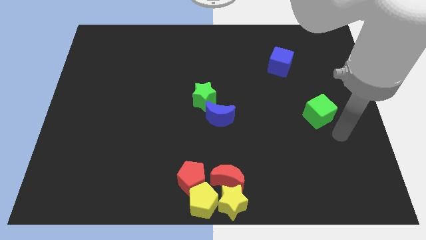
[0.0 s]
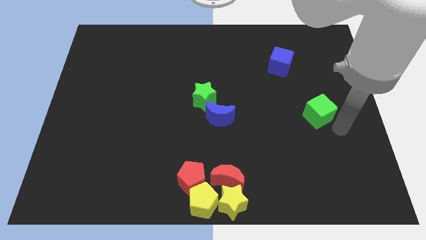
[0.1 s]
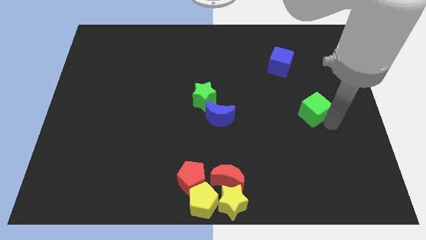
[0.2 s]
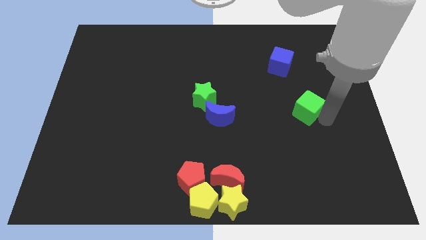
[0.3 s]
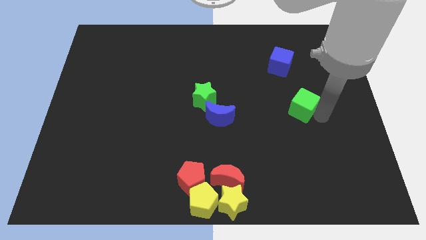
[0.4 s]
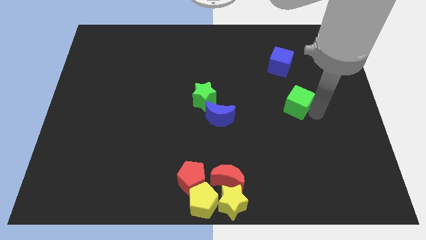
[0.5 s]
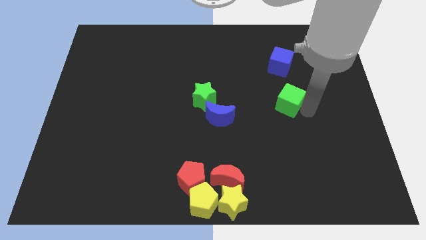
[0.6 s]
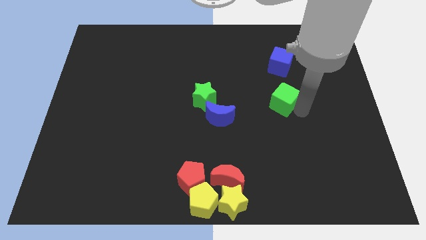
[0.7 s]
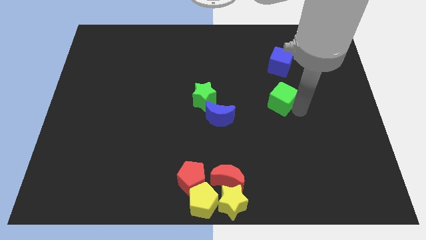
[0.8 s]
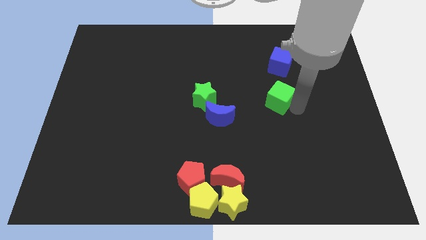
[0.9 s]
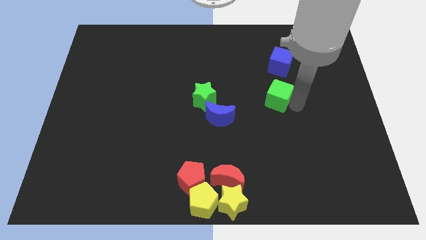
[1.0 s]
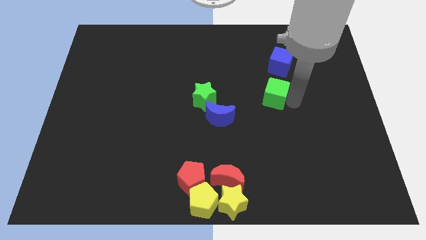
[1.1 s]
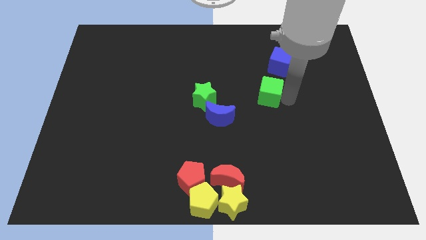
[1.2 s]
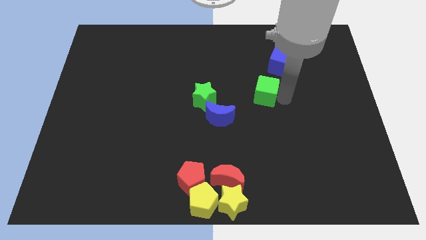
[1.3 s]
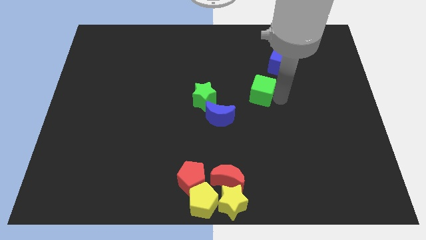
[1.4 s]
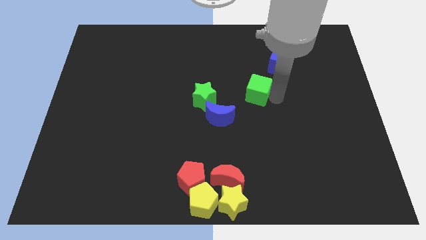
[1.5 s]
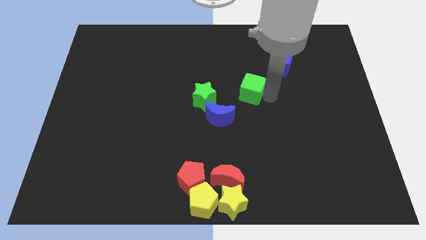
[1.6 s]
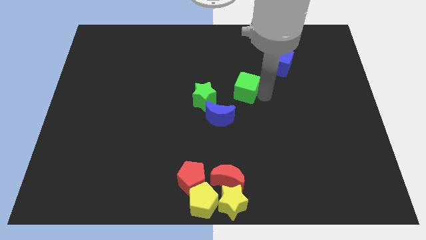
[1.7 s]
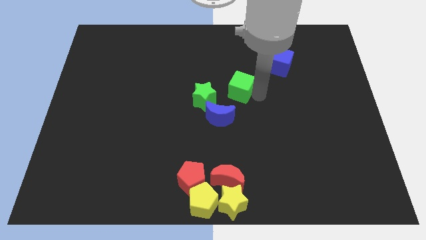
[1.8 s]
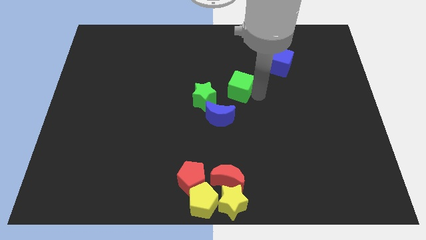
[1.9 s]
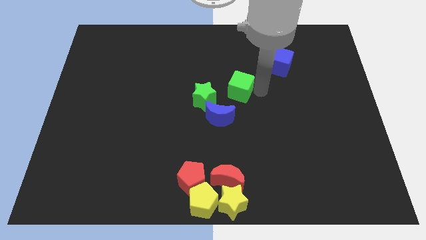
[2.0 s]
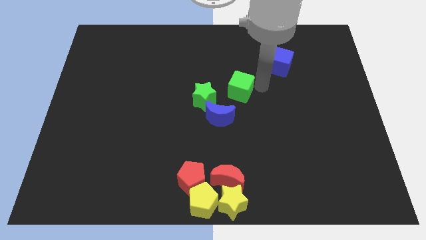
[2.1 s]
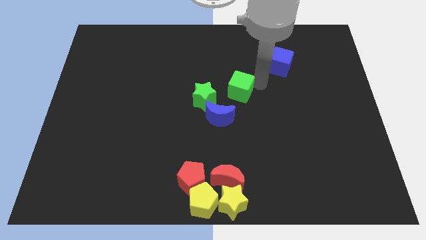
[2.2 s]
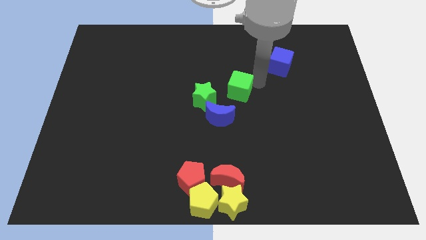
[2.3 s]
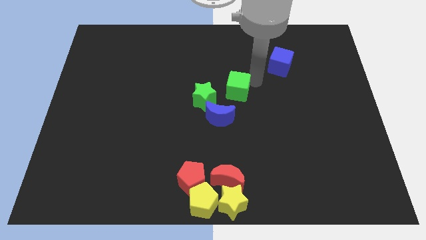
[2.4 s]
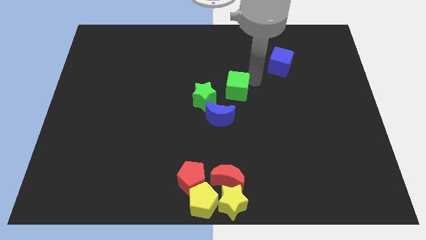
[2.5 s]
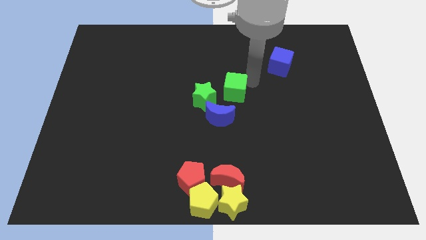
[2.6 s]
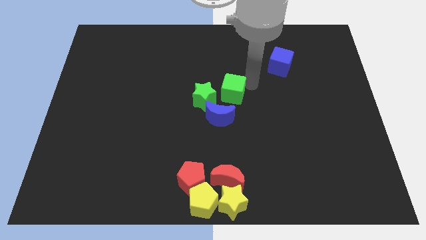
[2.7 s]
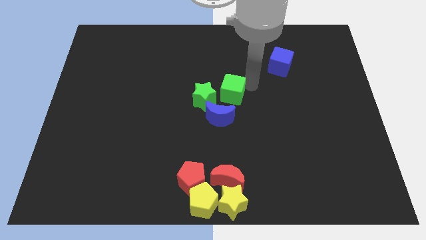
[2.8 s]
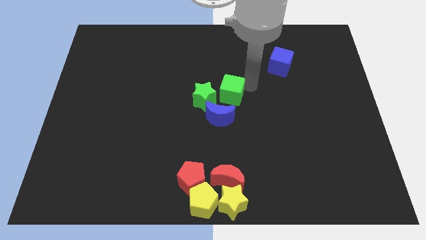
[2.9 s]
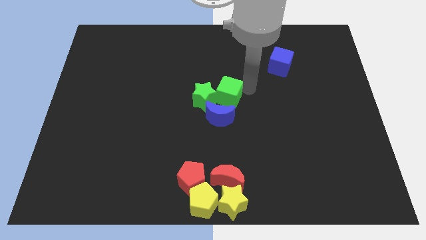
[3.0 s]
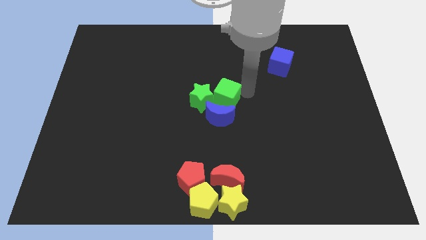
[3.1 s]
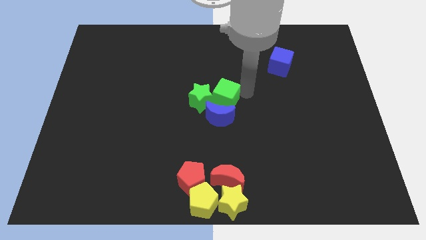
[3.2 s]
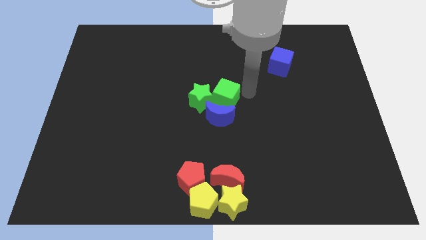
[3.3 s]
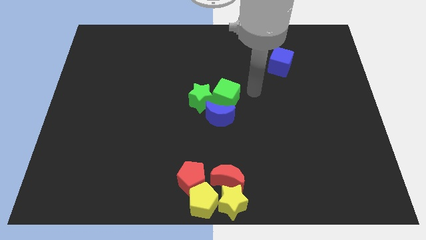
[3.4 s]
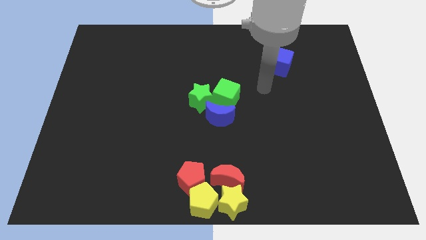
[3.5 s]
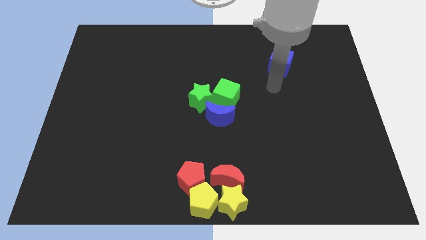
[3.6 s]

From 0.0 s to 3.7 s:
push the green cube into the green star

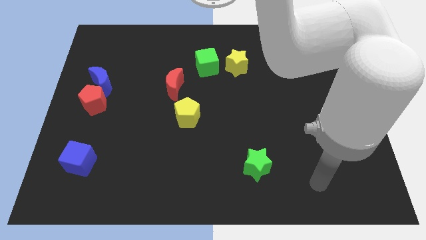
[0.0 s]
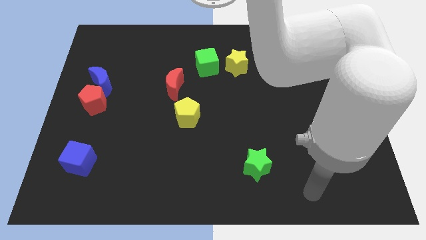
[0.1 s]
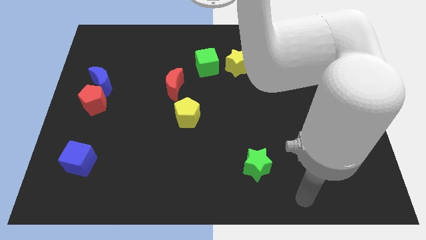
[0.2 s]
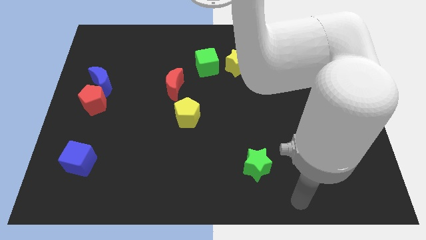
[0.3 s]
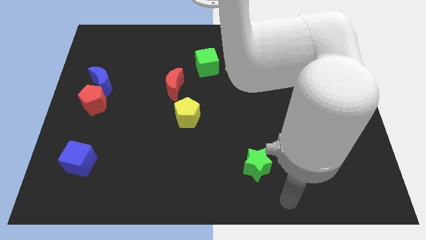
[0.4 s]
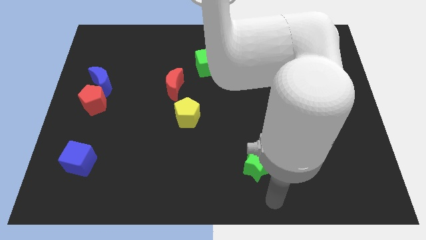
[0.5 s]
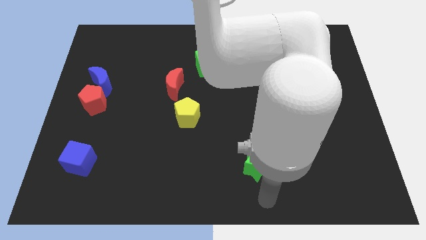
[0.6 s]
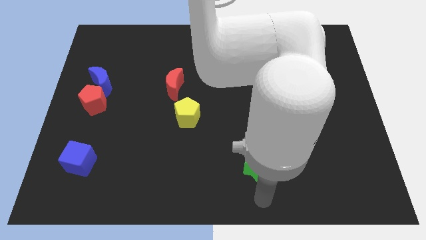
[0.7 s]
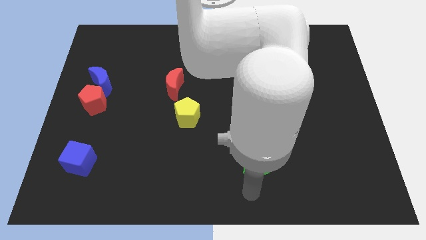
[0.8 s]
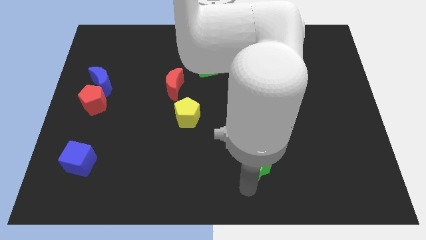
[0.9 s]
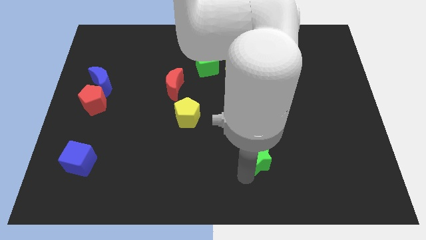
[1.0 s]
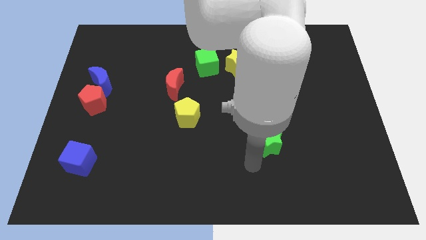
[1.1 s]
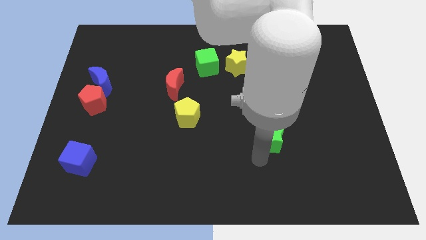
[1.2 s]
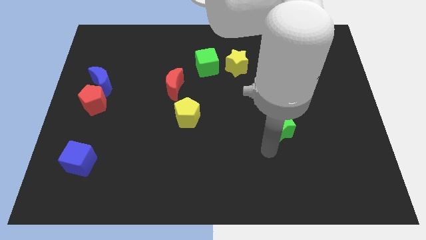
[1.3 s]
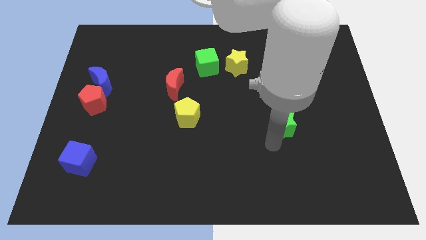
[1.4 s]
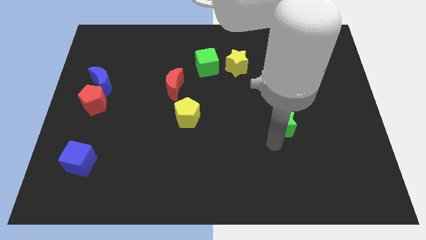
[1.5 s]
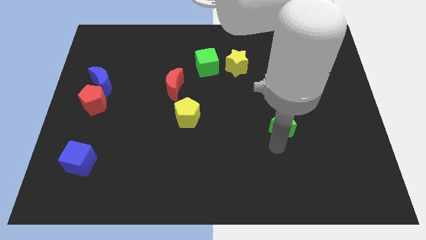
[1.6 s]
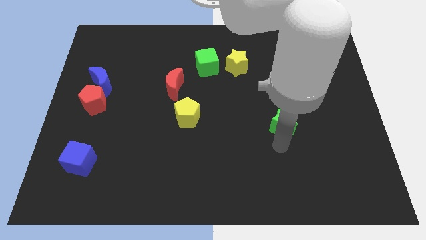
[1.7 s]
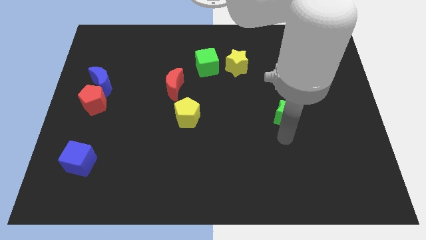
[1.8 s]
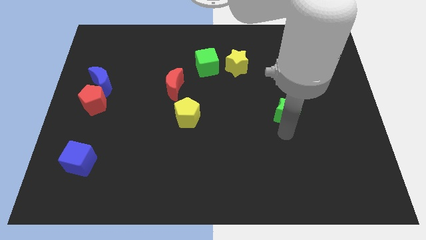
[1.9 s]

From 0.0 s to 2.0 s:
move the green star to the horizontal right side of the yellow pentagon

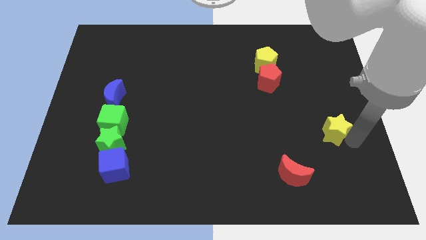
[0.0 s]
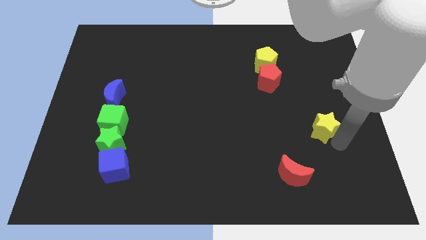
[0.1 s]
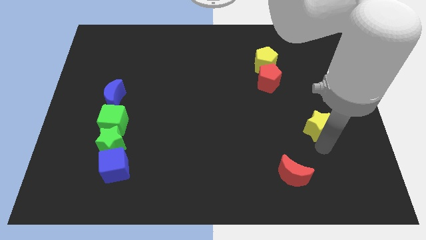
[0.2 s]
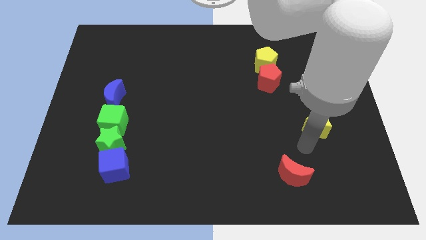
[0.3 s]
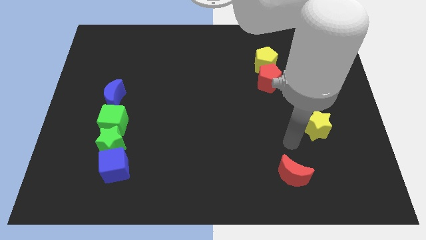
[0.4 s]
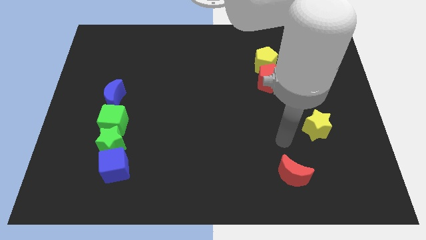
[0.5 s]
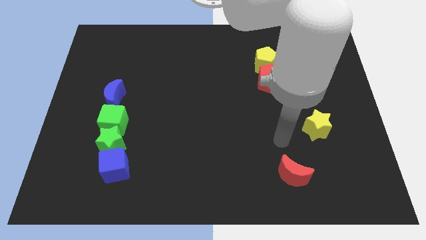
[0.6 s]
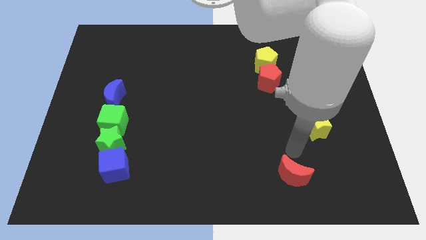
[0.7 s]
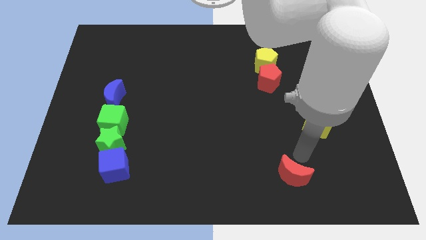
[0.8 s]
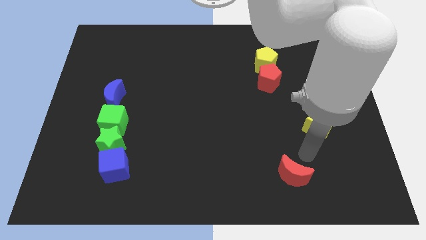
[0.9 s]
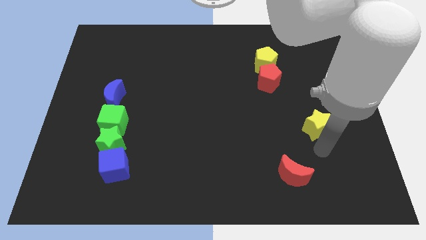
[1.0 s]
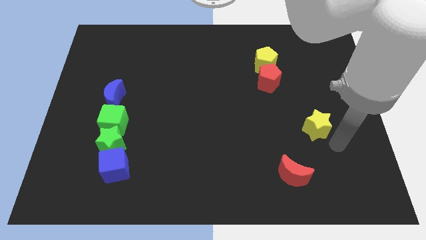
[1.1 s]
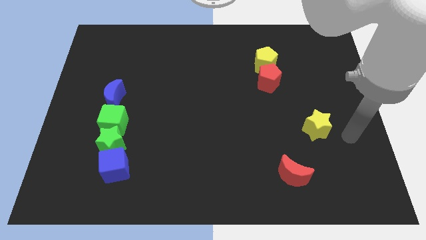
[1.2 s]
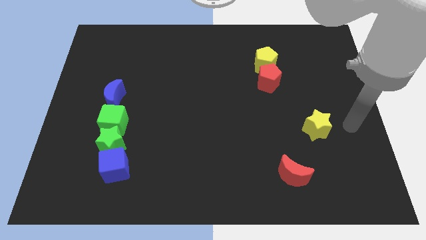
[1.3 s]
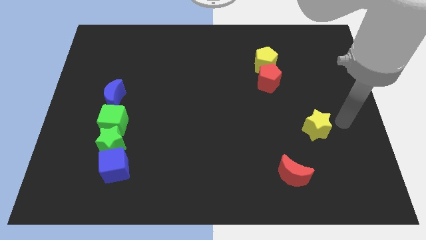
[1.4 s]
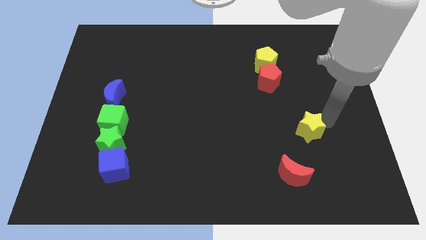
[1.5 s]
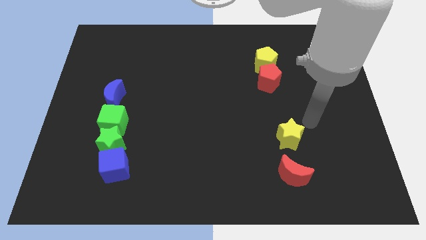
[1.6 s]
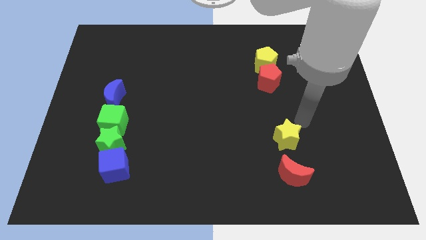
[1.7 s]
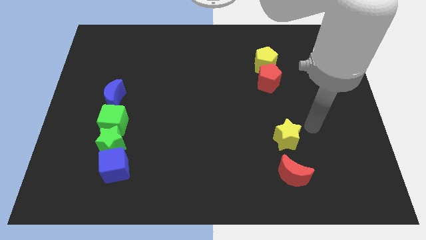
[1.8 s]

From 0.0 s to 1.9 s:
slightly move the yellow star towards the left

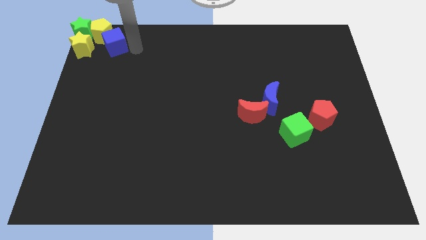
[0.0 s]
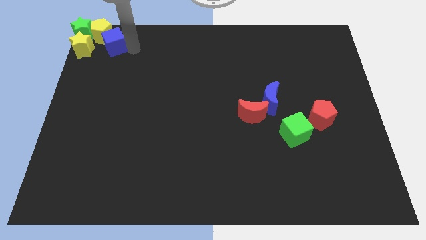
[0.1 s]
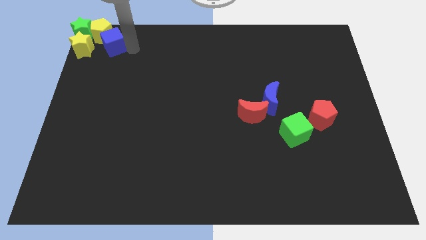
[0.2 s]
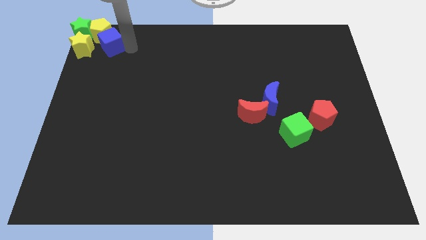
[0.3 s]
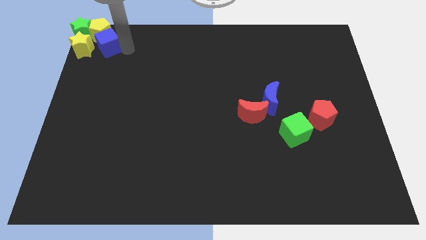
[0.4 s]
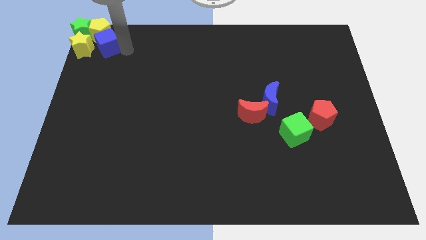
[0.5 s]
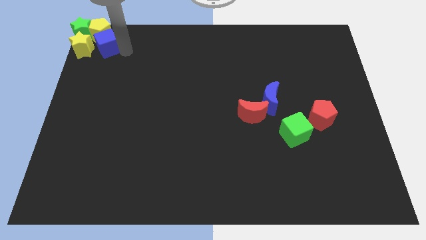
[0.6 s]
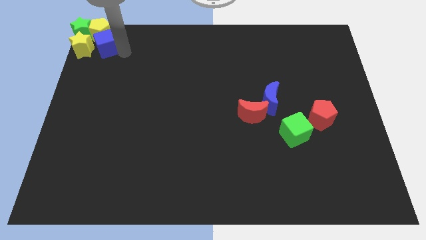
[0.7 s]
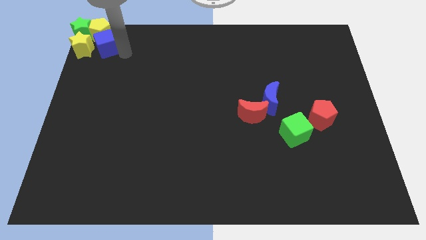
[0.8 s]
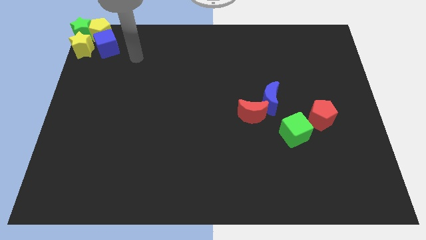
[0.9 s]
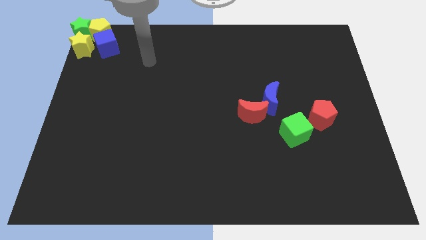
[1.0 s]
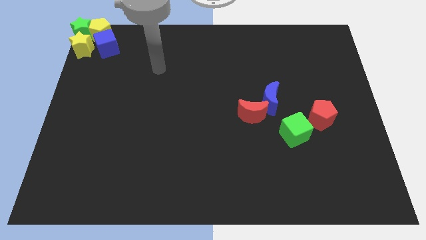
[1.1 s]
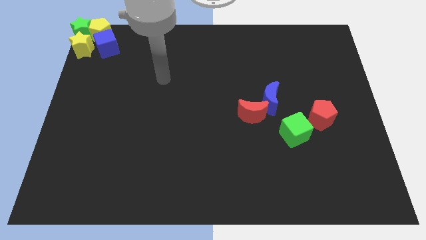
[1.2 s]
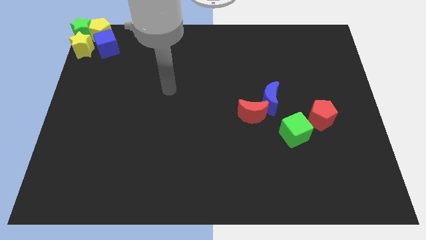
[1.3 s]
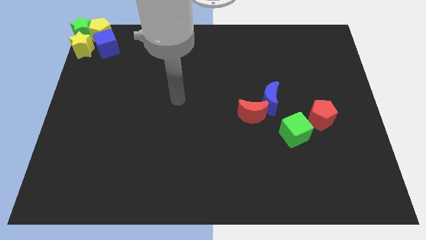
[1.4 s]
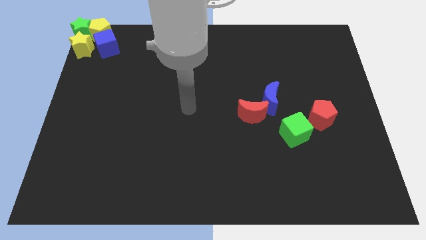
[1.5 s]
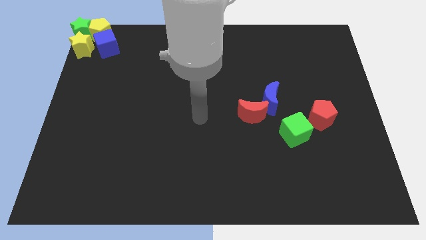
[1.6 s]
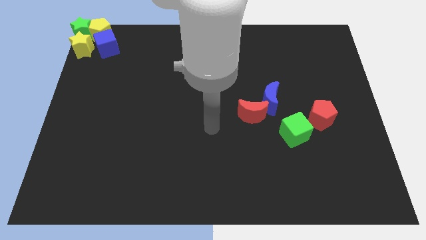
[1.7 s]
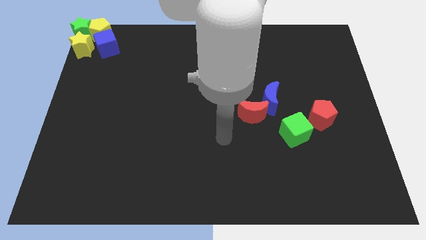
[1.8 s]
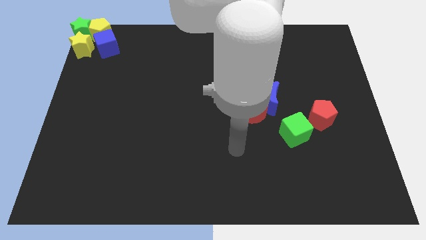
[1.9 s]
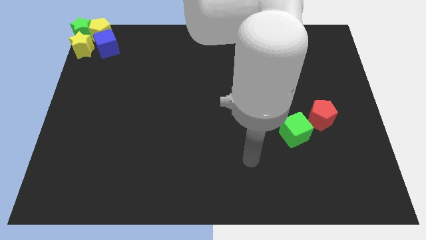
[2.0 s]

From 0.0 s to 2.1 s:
move your arm away from blue cube
